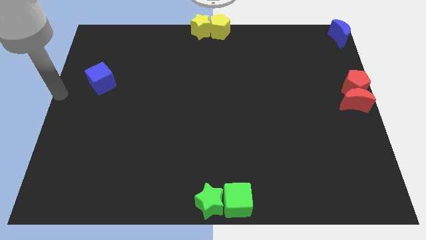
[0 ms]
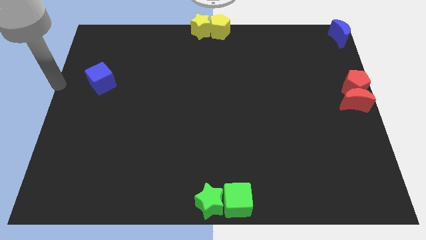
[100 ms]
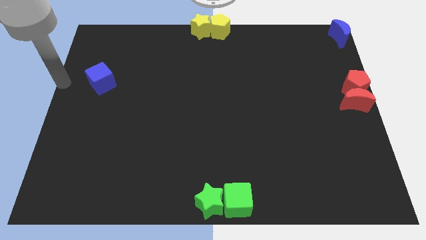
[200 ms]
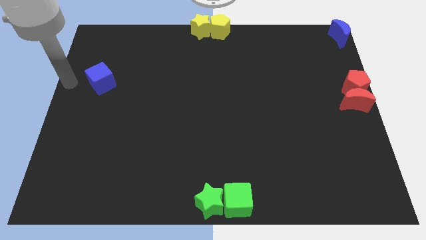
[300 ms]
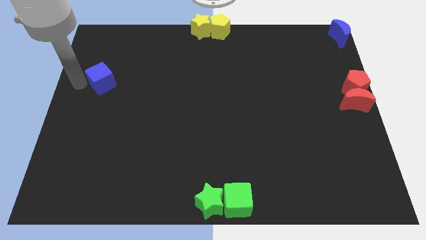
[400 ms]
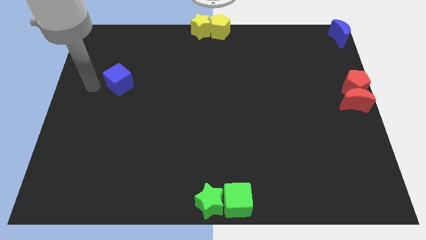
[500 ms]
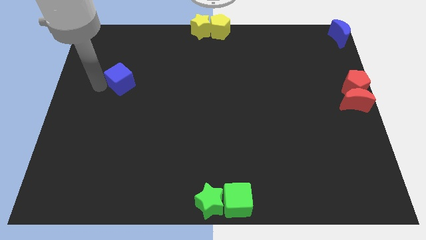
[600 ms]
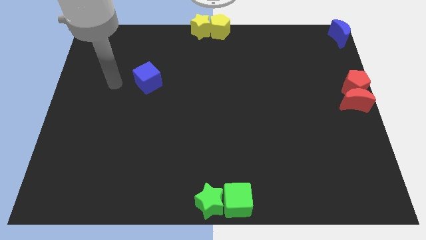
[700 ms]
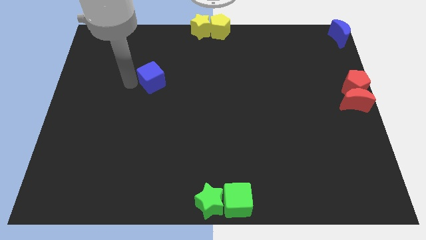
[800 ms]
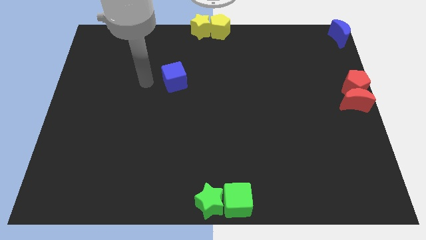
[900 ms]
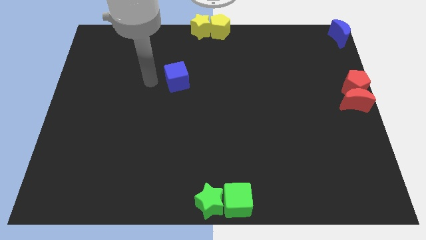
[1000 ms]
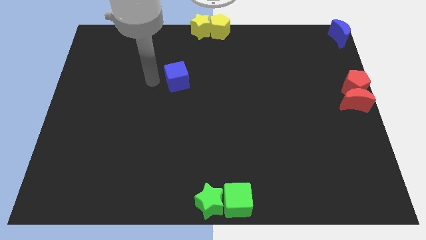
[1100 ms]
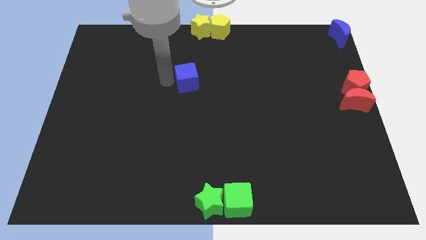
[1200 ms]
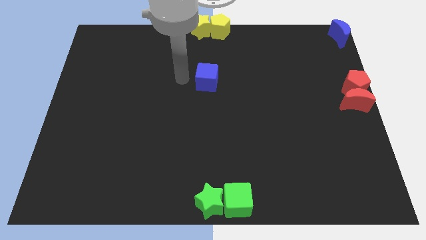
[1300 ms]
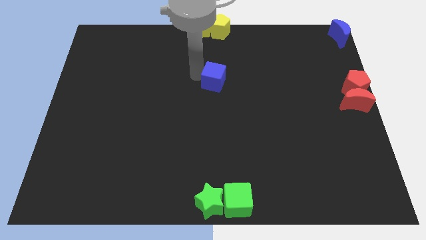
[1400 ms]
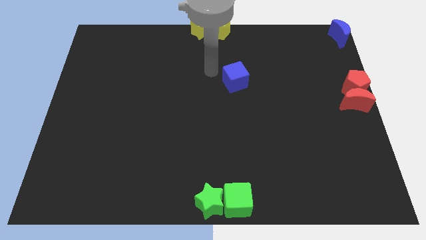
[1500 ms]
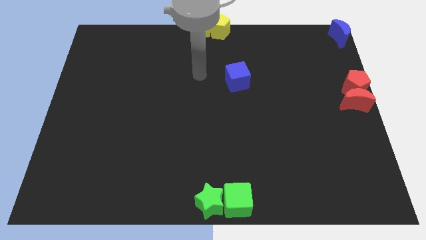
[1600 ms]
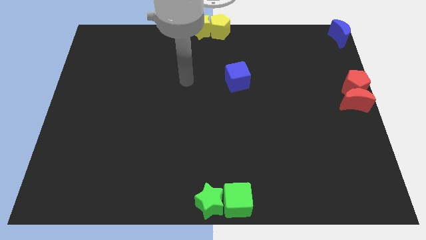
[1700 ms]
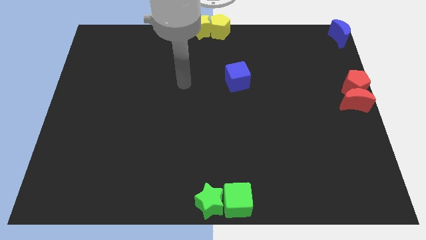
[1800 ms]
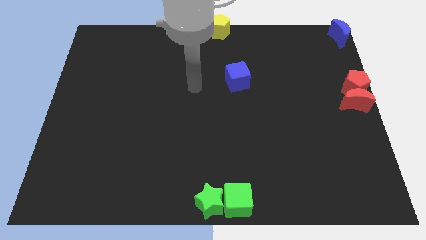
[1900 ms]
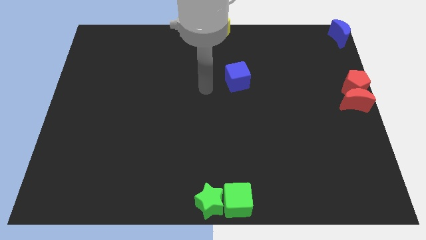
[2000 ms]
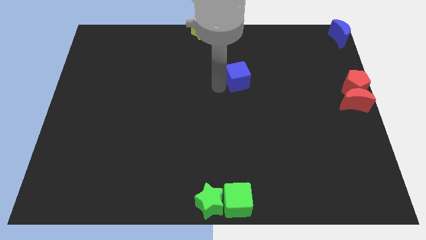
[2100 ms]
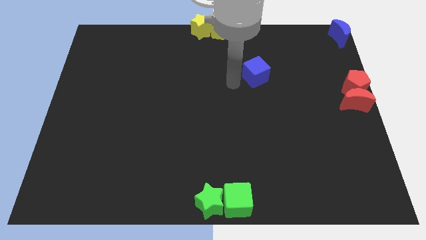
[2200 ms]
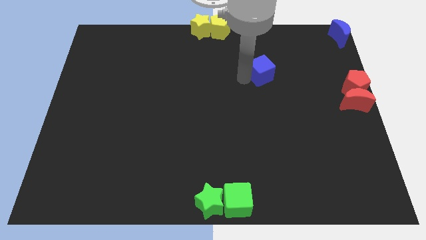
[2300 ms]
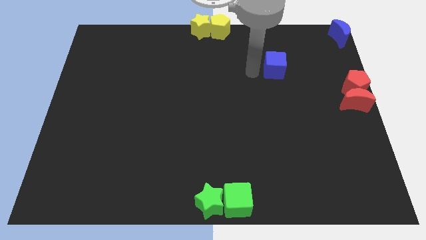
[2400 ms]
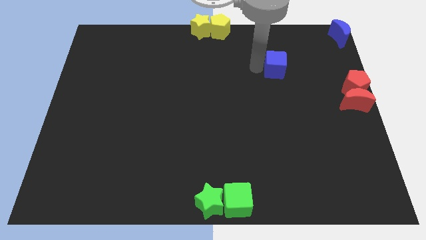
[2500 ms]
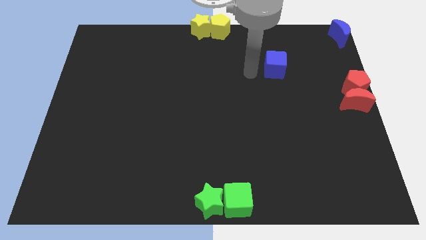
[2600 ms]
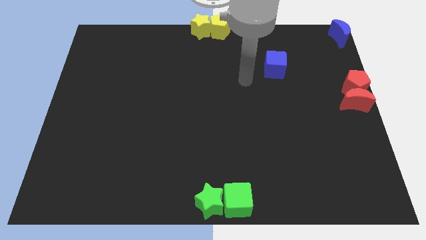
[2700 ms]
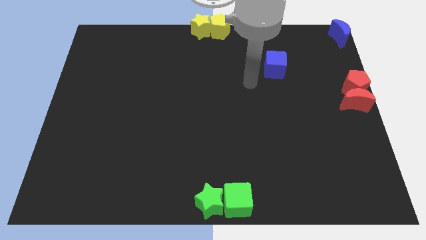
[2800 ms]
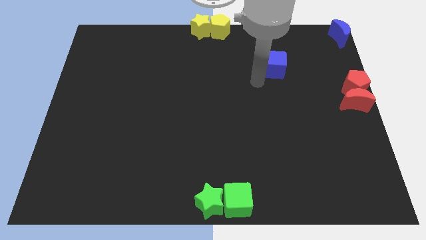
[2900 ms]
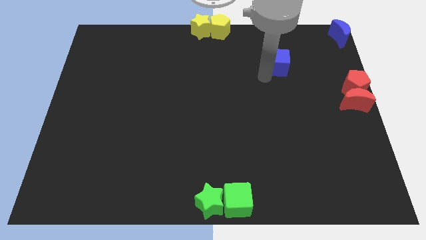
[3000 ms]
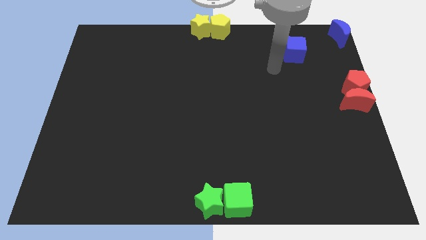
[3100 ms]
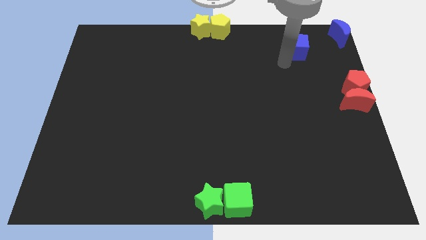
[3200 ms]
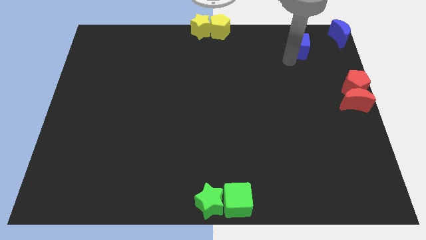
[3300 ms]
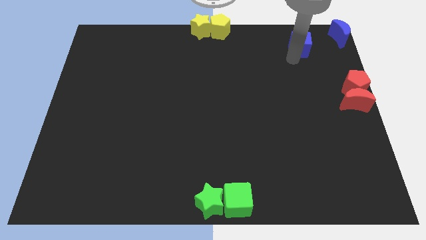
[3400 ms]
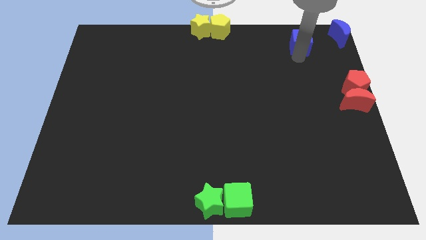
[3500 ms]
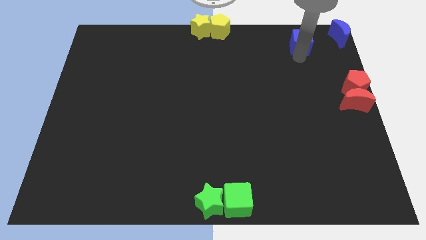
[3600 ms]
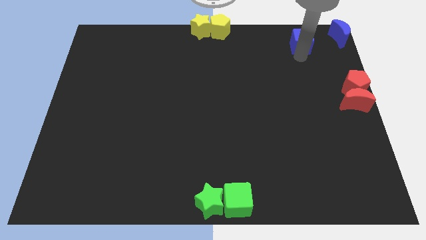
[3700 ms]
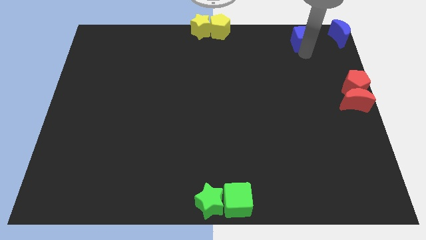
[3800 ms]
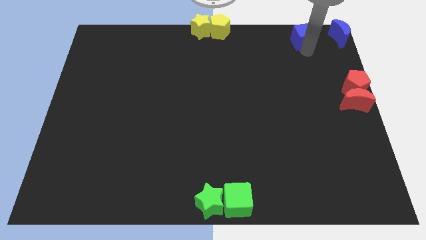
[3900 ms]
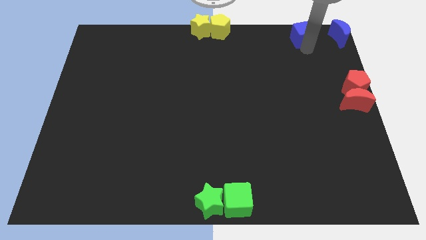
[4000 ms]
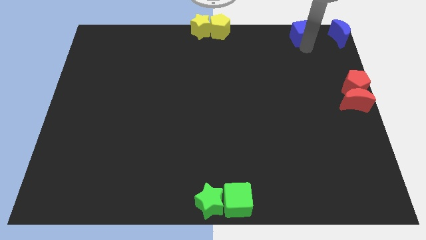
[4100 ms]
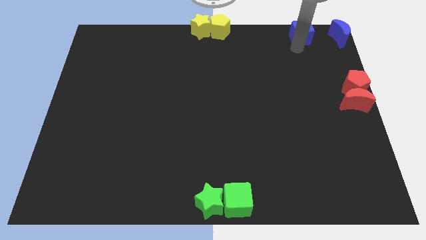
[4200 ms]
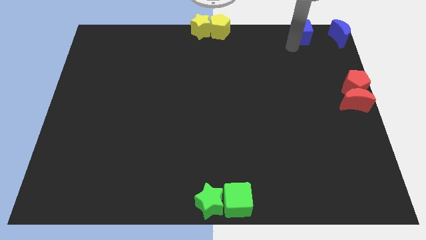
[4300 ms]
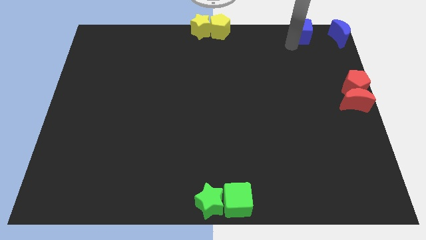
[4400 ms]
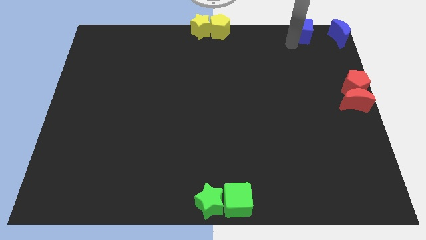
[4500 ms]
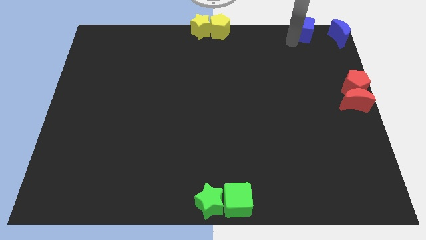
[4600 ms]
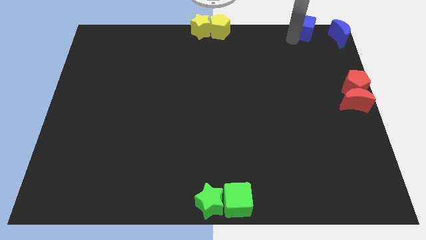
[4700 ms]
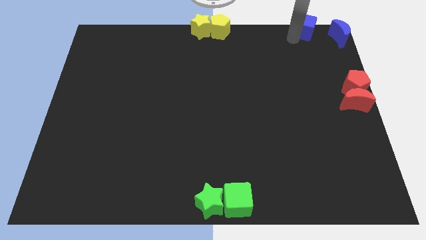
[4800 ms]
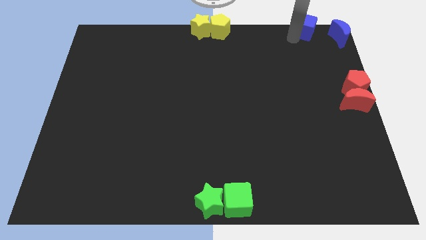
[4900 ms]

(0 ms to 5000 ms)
place the blue cube left to the blue moon

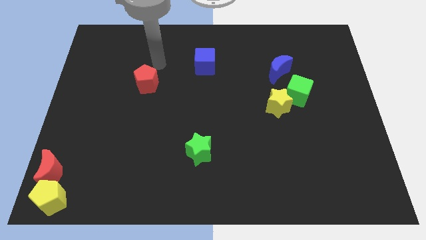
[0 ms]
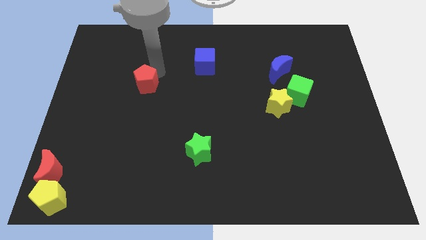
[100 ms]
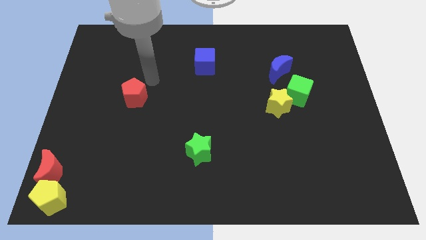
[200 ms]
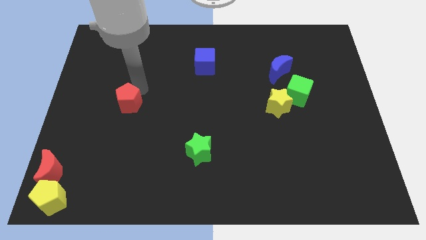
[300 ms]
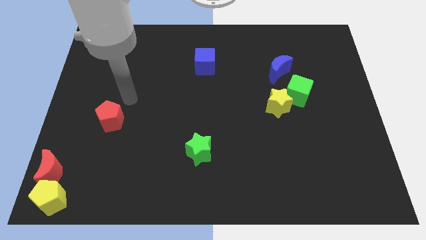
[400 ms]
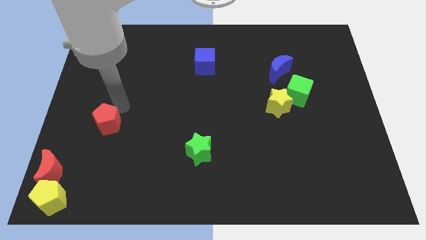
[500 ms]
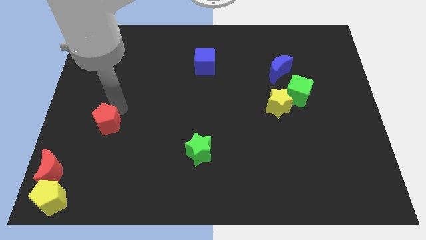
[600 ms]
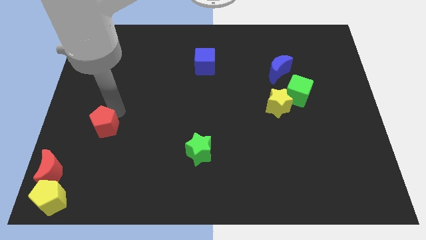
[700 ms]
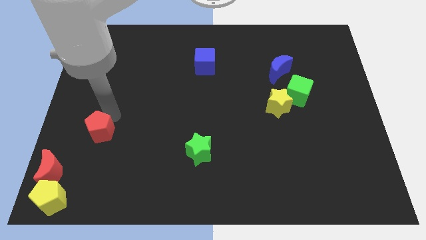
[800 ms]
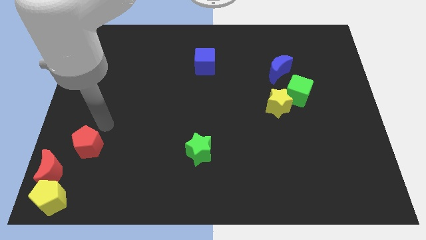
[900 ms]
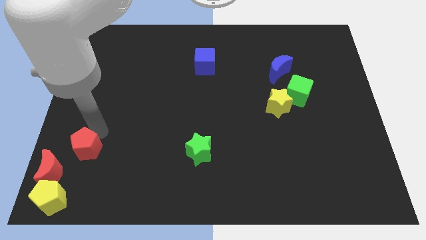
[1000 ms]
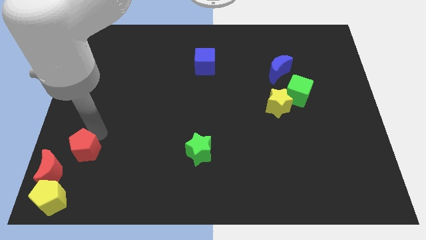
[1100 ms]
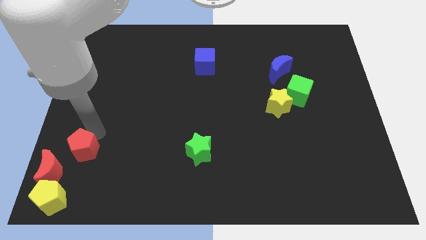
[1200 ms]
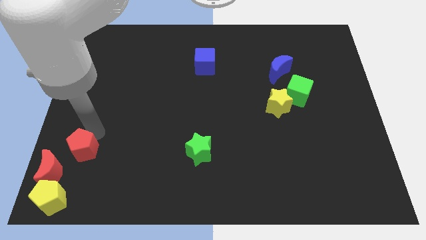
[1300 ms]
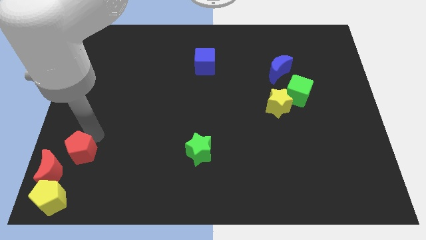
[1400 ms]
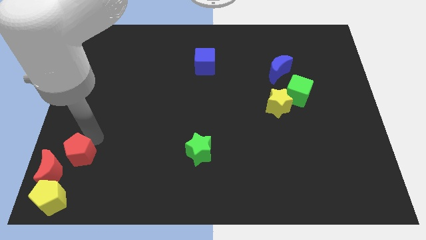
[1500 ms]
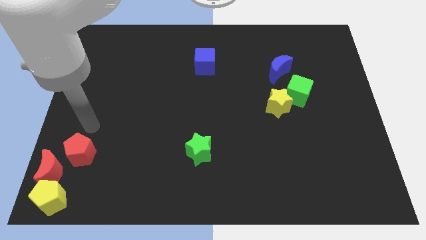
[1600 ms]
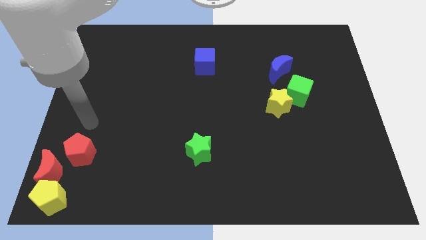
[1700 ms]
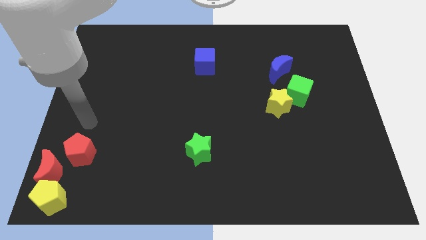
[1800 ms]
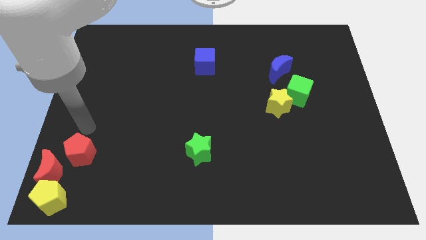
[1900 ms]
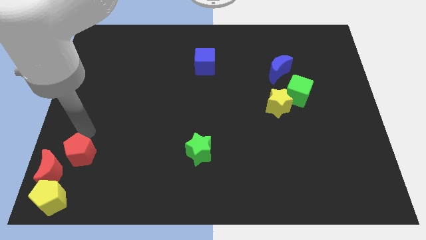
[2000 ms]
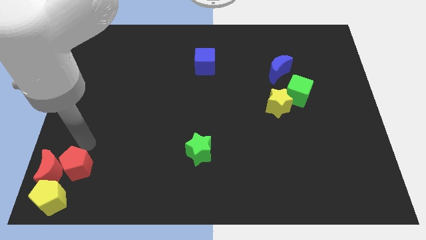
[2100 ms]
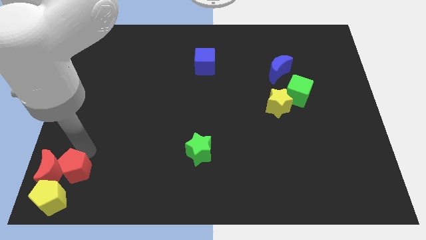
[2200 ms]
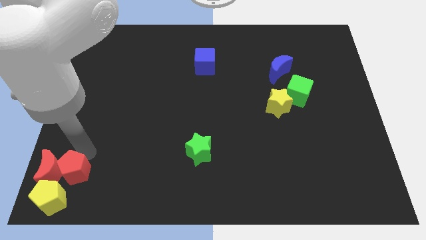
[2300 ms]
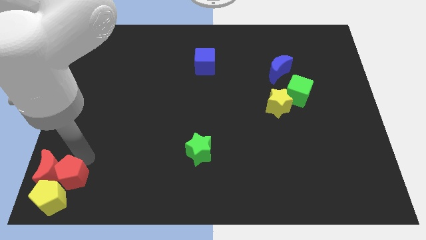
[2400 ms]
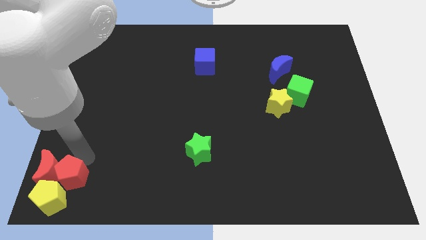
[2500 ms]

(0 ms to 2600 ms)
place the red pentagon on the right side of the red moon

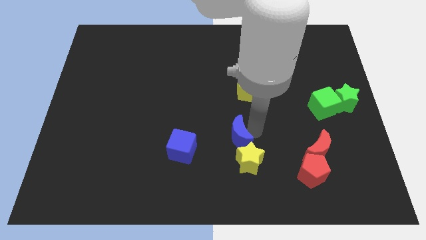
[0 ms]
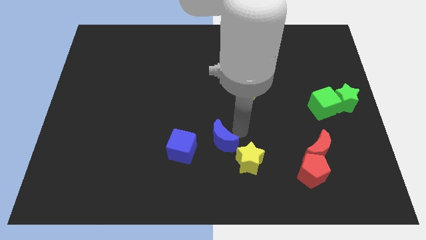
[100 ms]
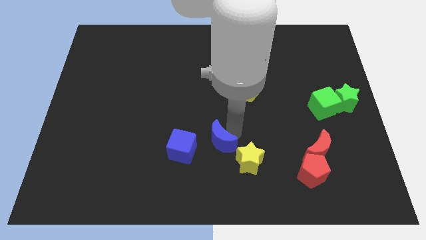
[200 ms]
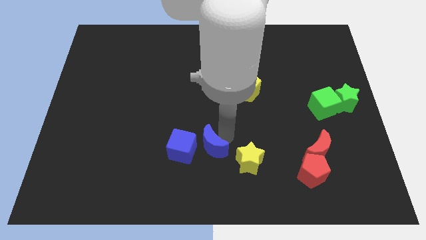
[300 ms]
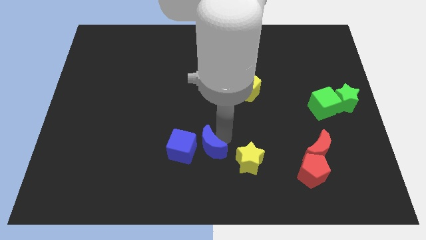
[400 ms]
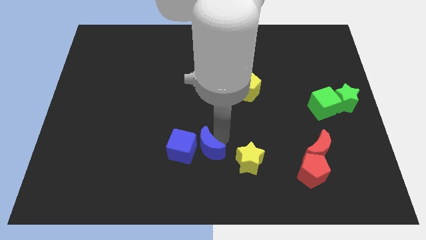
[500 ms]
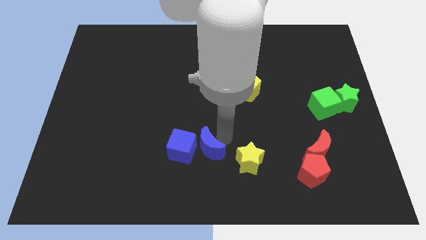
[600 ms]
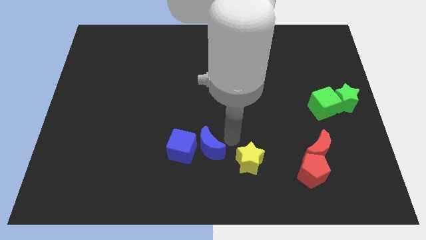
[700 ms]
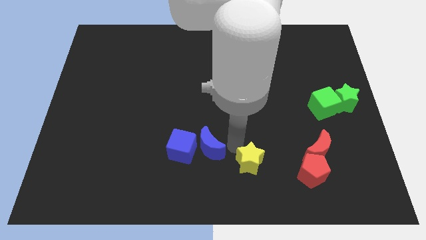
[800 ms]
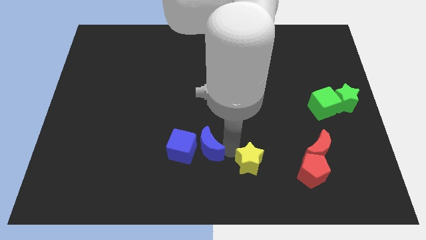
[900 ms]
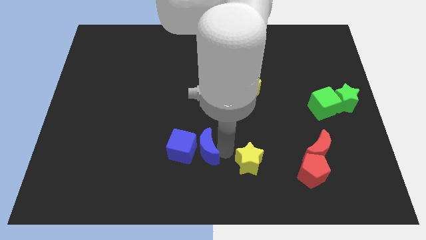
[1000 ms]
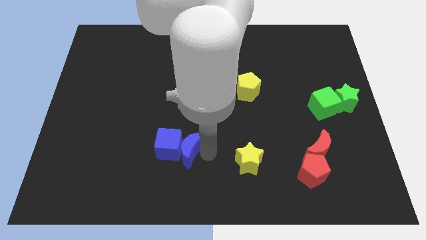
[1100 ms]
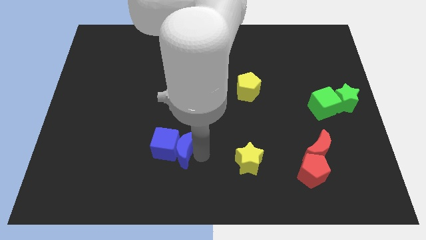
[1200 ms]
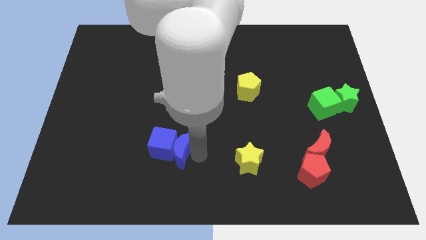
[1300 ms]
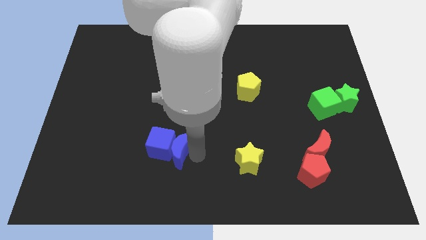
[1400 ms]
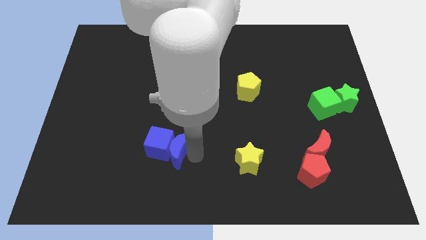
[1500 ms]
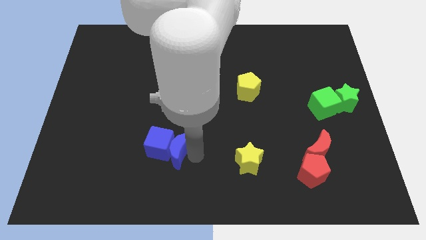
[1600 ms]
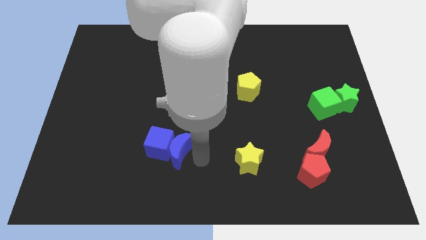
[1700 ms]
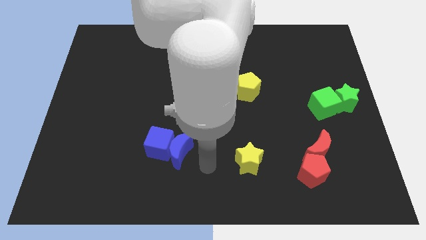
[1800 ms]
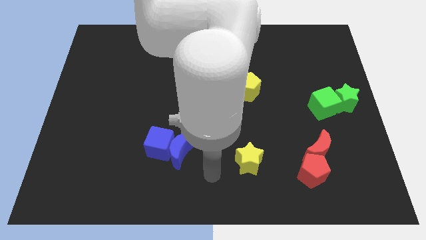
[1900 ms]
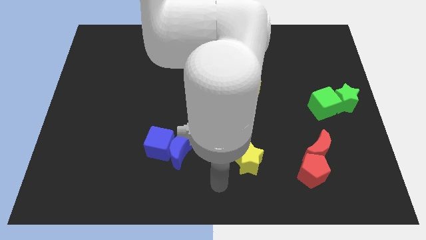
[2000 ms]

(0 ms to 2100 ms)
move the blue crescent and blue cube towards left
